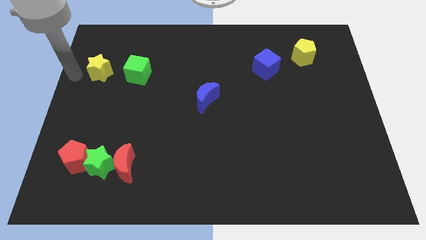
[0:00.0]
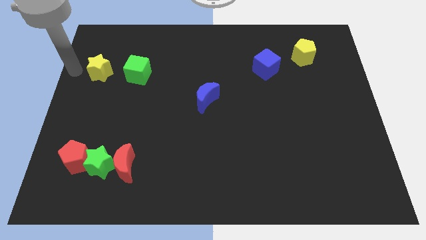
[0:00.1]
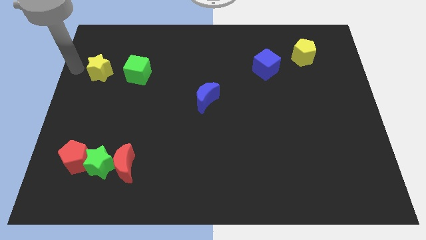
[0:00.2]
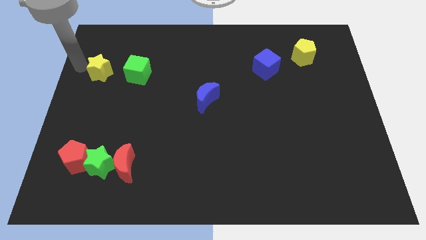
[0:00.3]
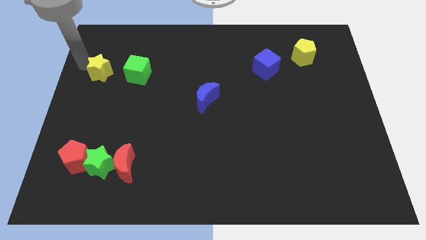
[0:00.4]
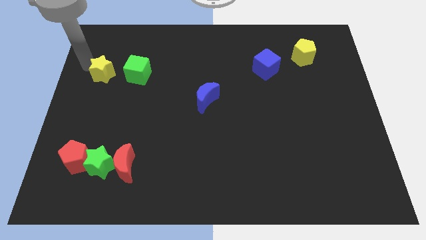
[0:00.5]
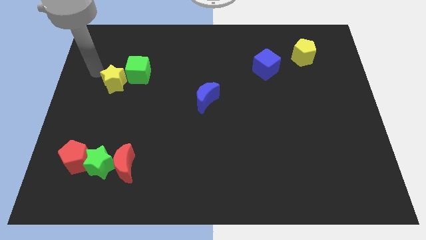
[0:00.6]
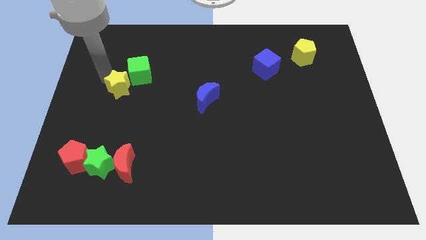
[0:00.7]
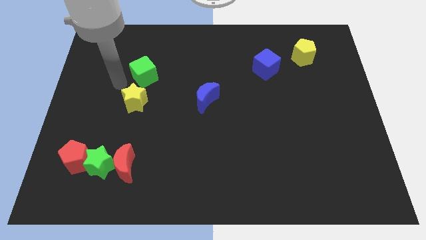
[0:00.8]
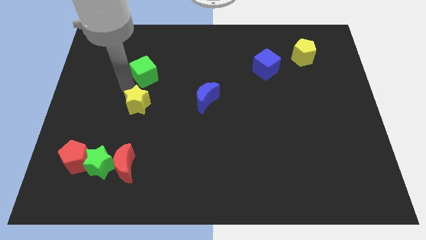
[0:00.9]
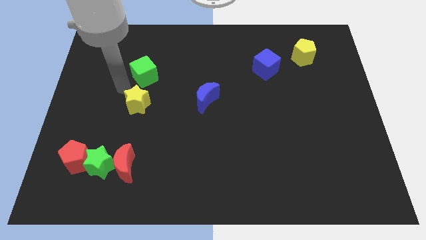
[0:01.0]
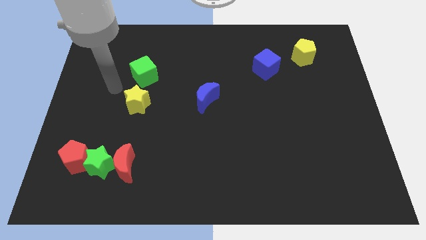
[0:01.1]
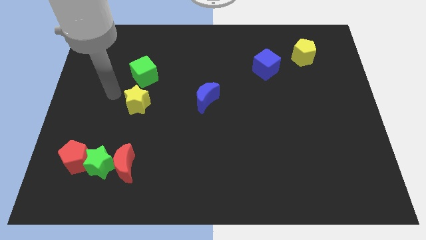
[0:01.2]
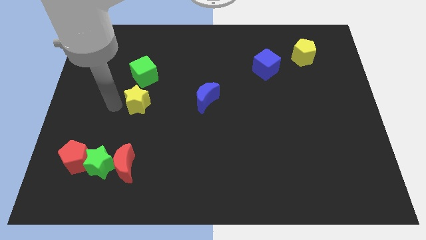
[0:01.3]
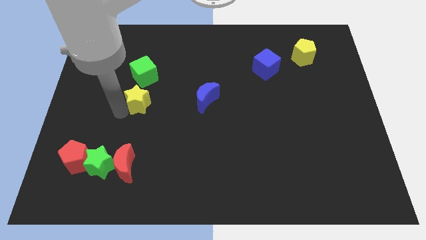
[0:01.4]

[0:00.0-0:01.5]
push the yellow star below the green cube

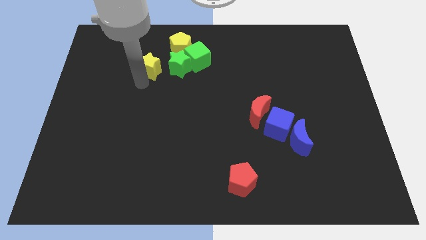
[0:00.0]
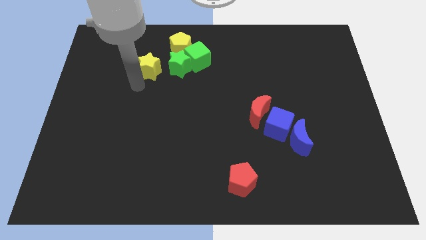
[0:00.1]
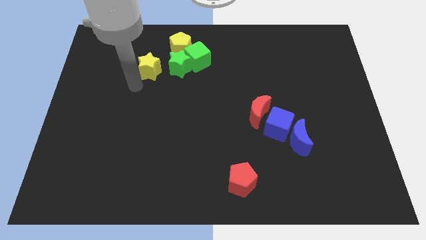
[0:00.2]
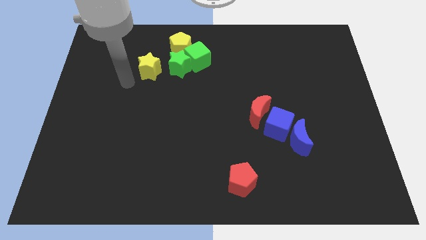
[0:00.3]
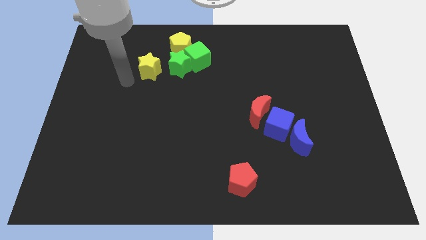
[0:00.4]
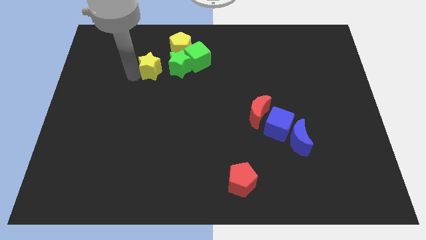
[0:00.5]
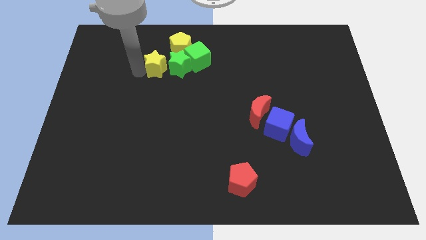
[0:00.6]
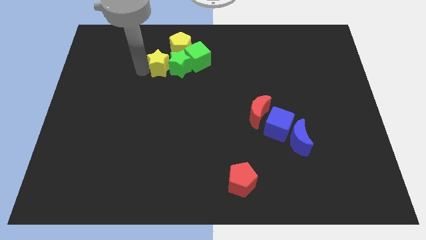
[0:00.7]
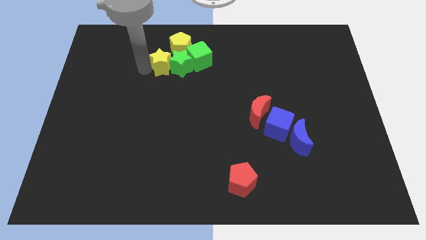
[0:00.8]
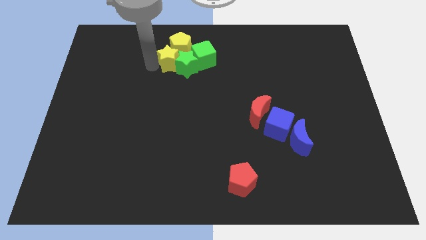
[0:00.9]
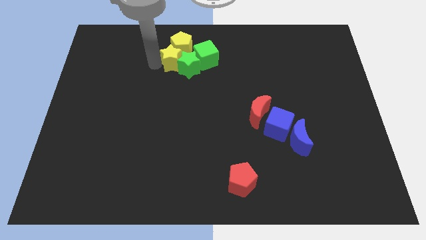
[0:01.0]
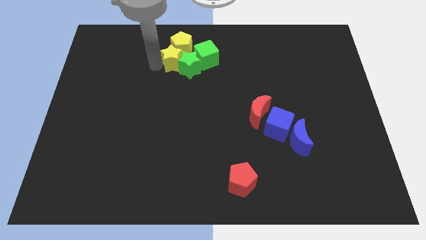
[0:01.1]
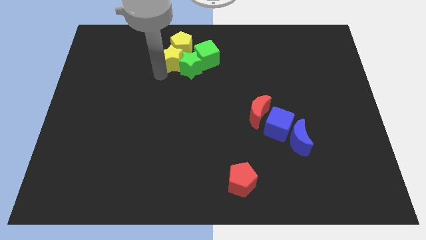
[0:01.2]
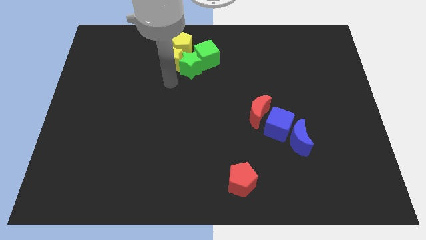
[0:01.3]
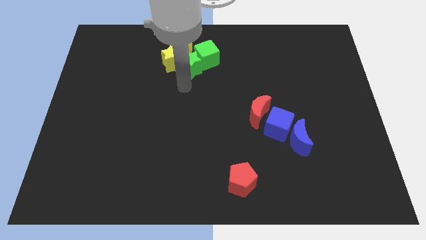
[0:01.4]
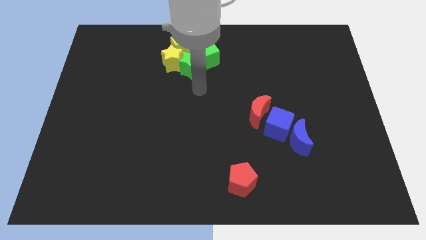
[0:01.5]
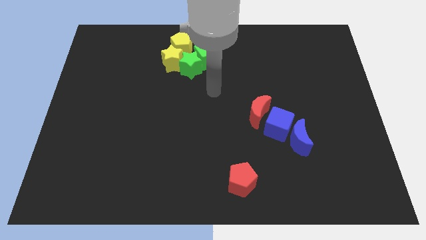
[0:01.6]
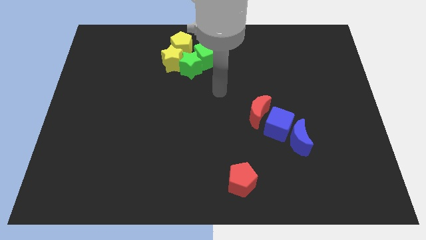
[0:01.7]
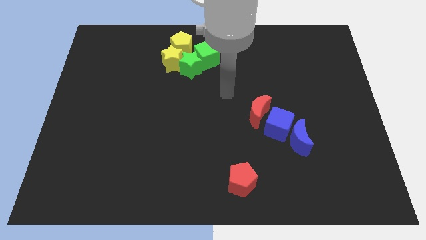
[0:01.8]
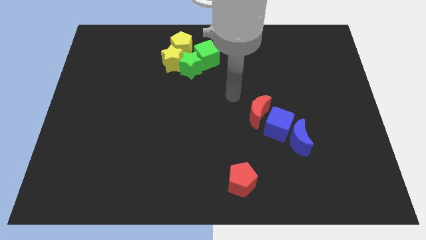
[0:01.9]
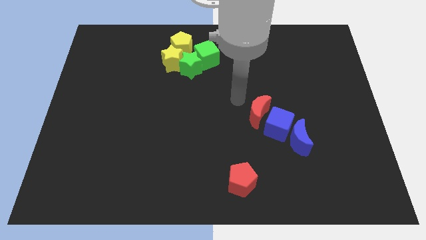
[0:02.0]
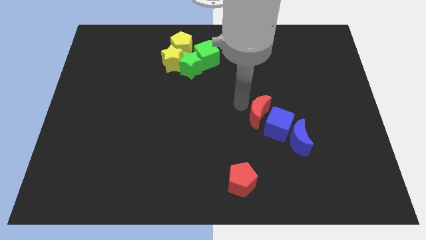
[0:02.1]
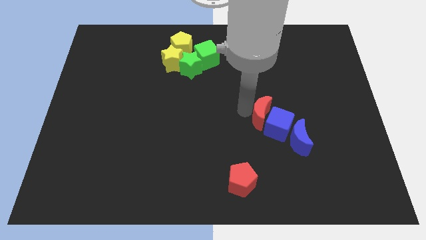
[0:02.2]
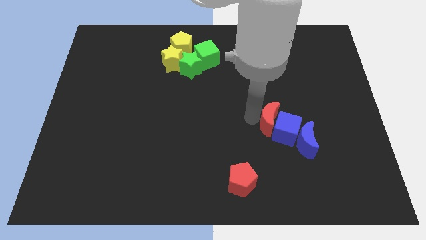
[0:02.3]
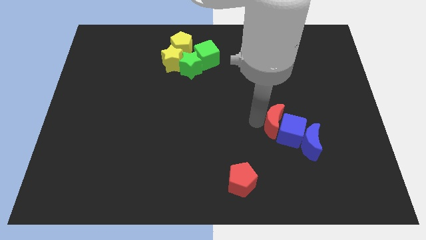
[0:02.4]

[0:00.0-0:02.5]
move your arm from yellow star to red moon

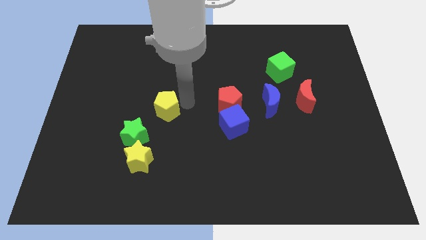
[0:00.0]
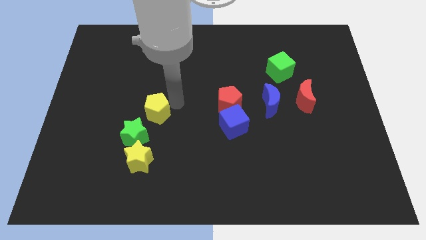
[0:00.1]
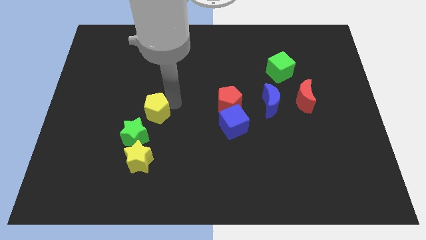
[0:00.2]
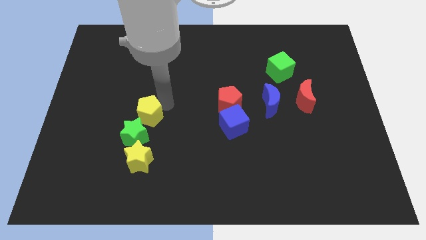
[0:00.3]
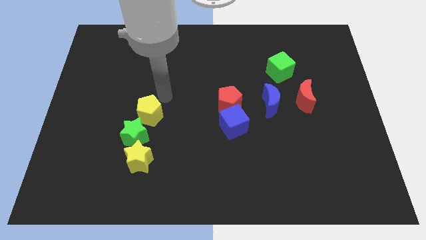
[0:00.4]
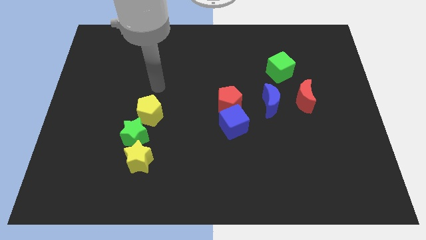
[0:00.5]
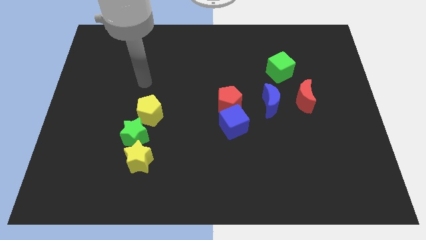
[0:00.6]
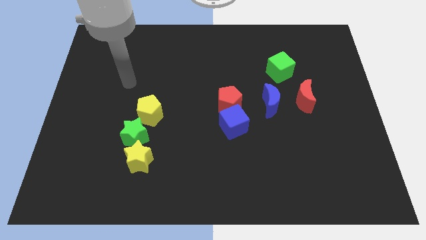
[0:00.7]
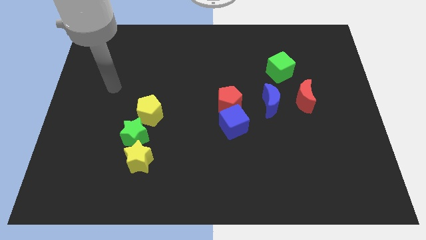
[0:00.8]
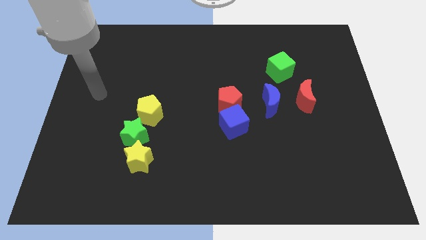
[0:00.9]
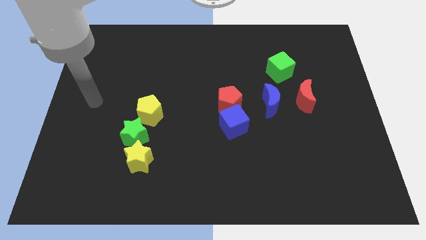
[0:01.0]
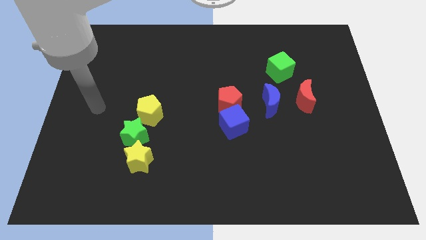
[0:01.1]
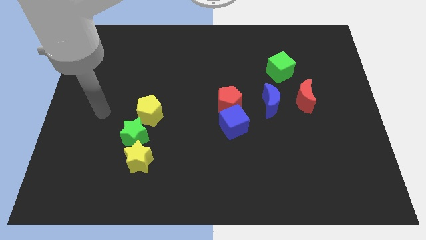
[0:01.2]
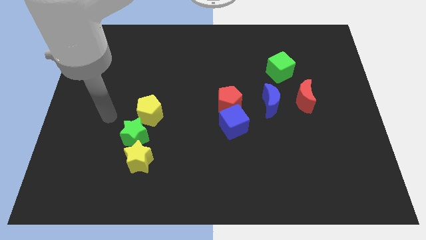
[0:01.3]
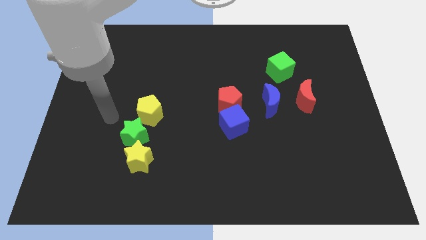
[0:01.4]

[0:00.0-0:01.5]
move the yellow pentagon close to the green star

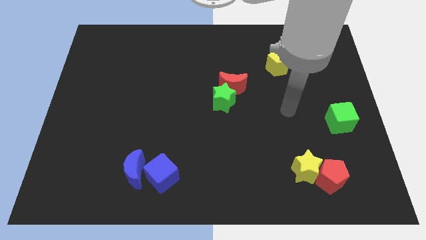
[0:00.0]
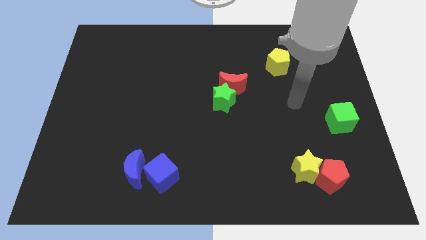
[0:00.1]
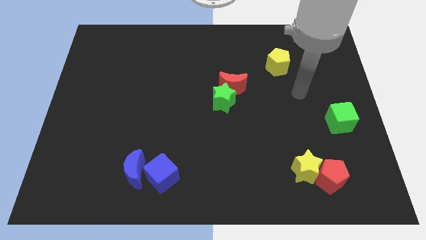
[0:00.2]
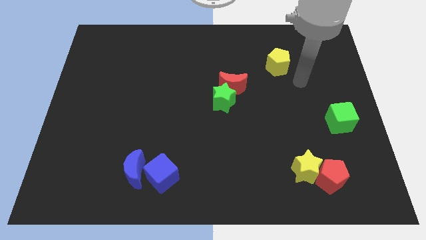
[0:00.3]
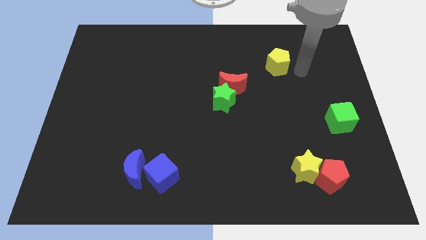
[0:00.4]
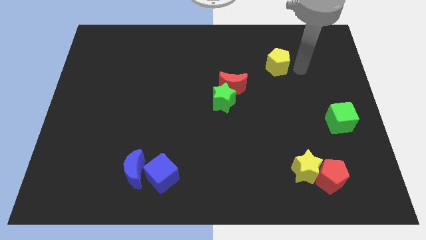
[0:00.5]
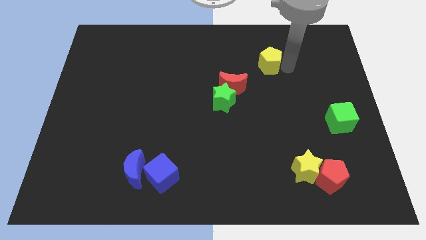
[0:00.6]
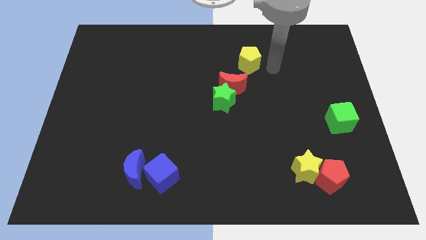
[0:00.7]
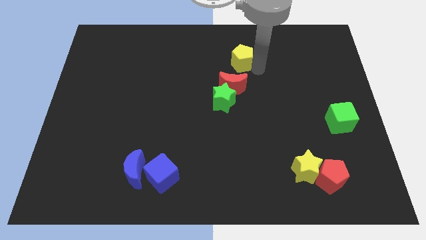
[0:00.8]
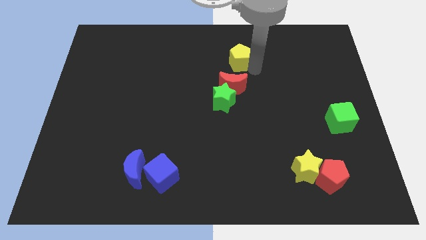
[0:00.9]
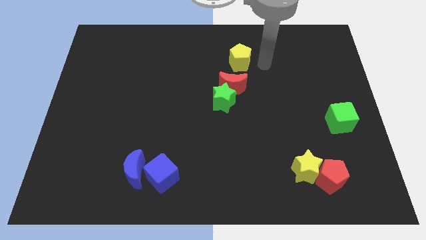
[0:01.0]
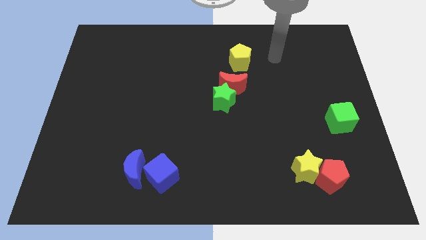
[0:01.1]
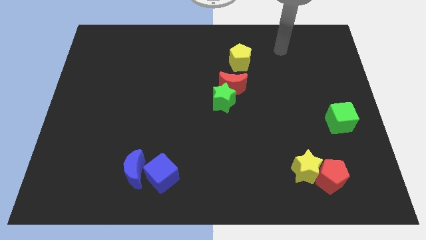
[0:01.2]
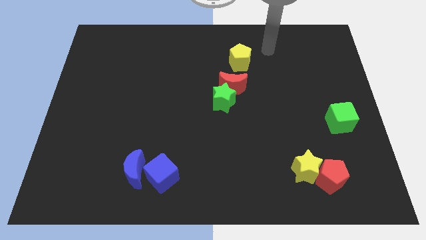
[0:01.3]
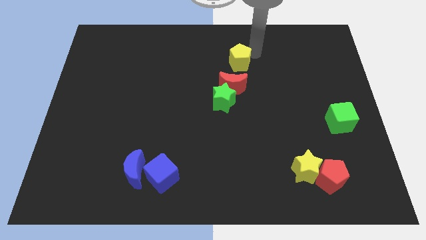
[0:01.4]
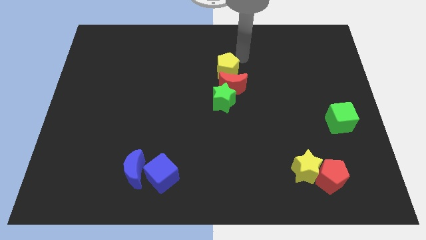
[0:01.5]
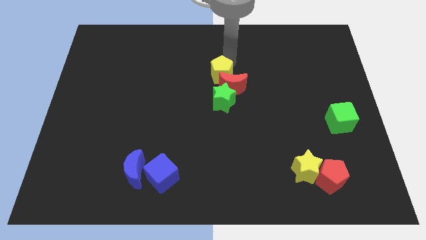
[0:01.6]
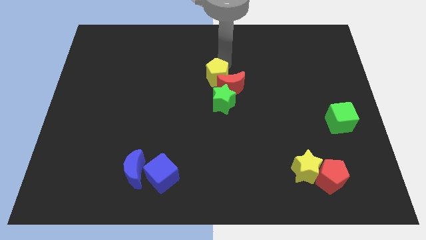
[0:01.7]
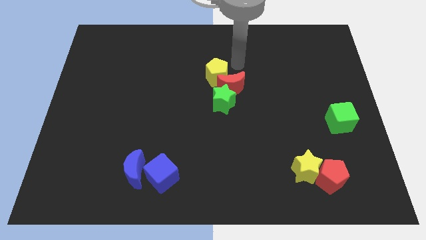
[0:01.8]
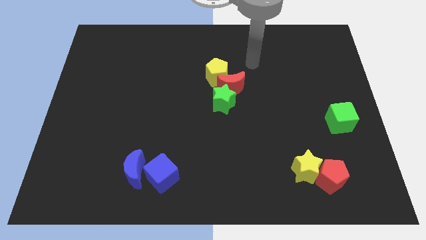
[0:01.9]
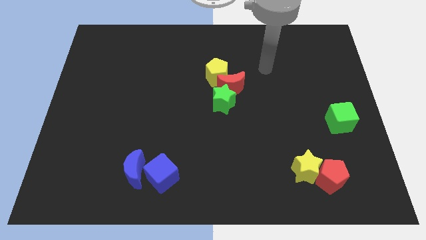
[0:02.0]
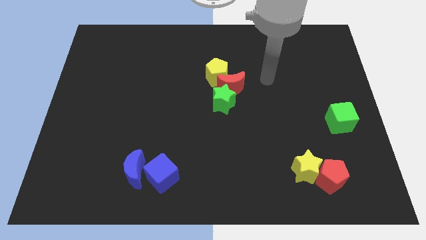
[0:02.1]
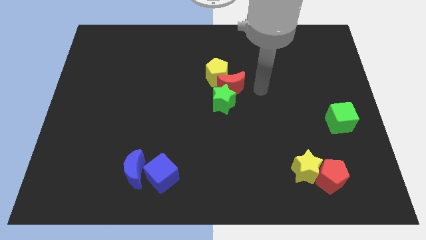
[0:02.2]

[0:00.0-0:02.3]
place the yellow pentagon on top of the red moon

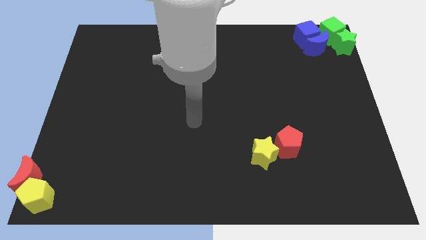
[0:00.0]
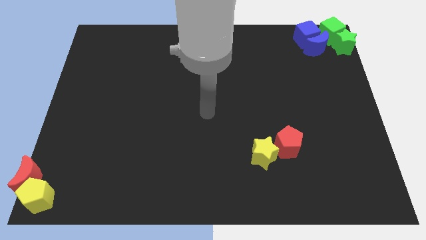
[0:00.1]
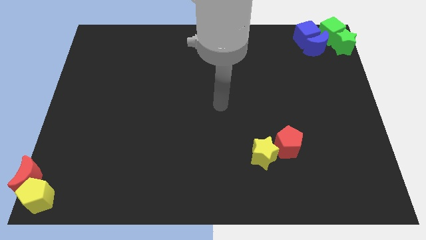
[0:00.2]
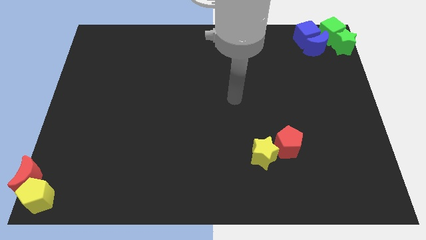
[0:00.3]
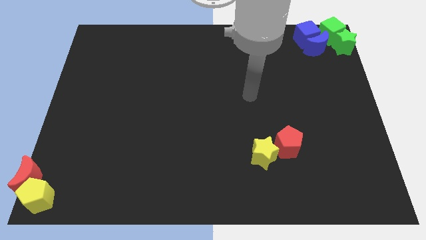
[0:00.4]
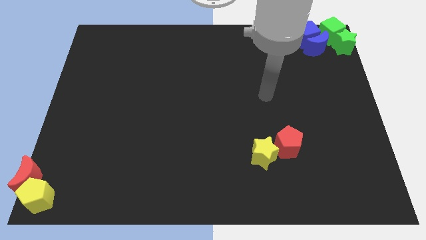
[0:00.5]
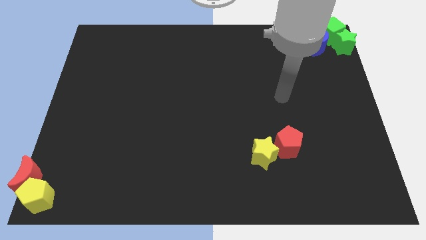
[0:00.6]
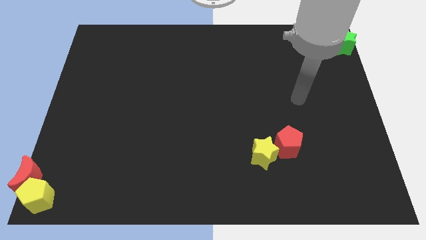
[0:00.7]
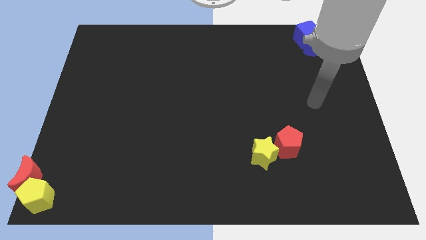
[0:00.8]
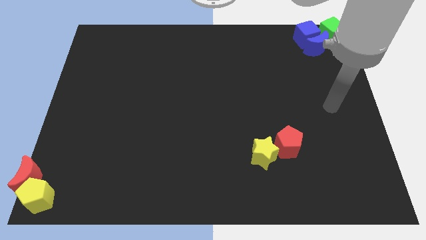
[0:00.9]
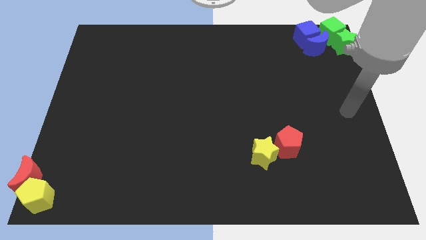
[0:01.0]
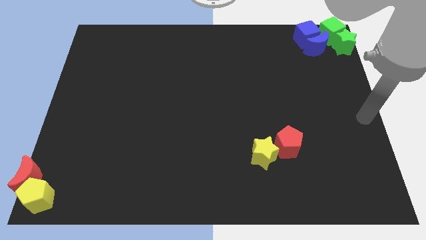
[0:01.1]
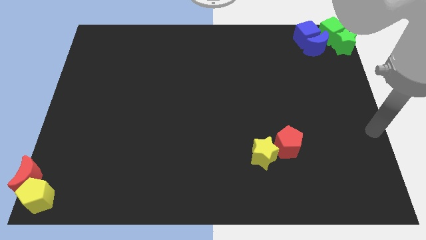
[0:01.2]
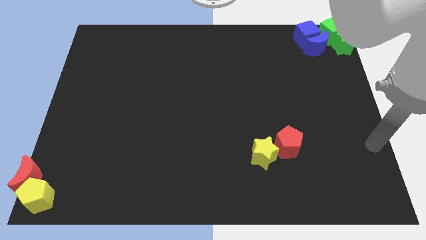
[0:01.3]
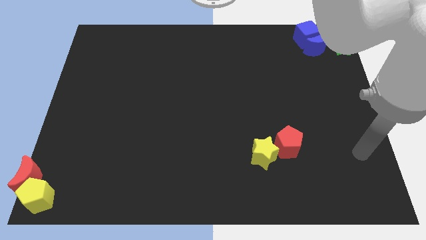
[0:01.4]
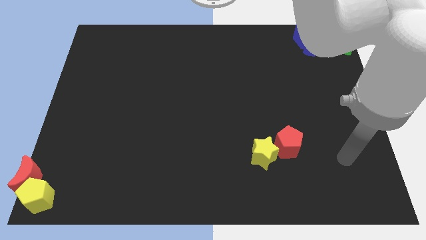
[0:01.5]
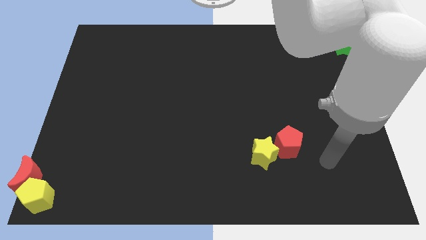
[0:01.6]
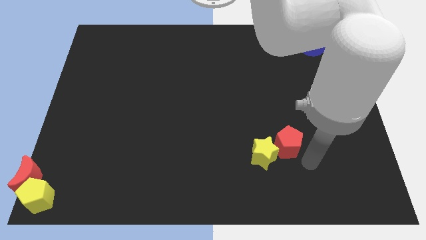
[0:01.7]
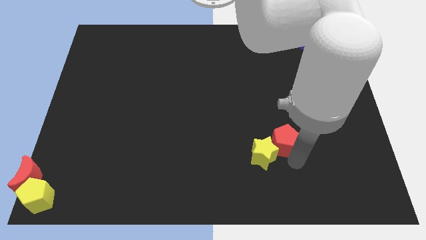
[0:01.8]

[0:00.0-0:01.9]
point your arm at the bottom right side of the red pentagon
